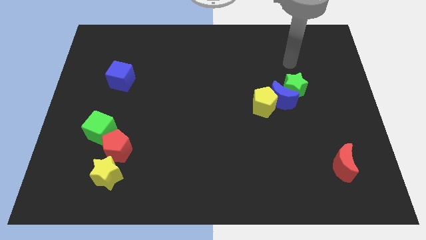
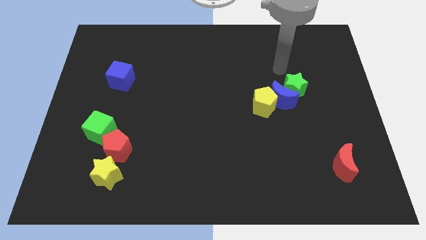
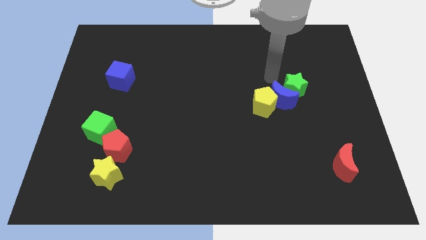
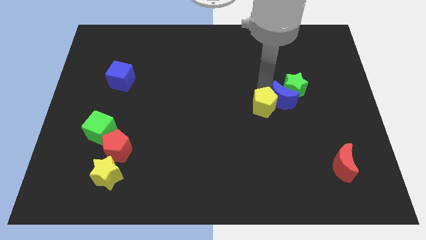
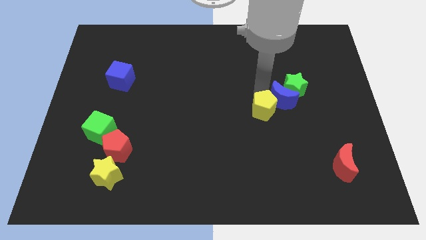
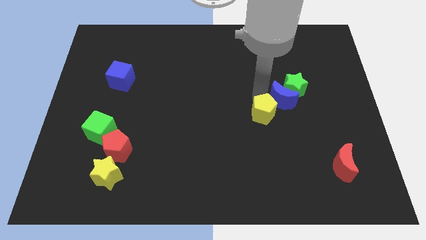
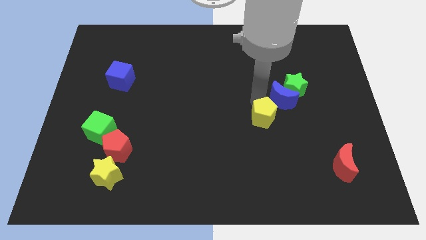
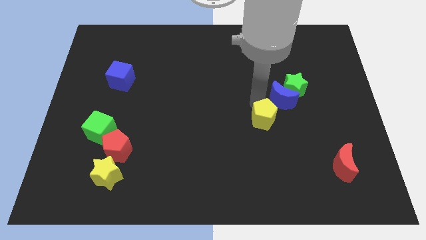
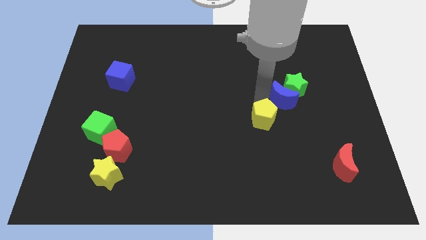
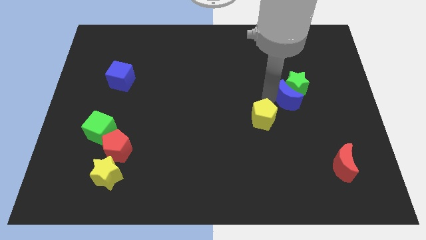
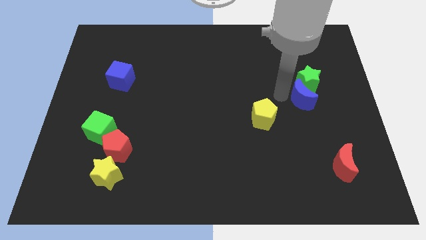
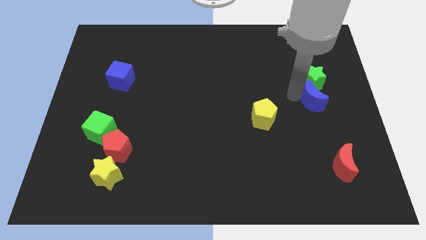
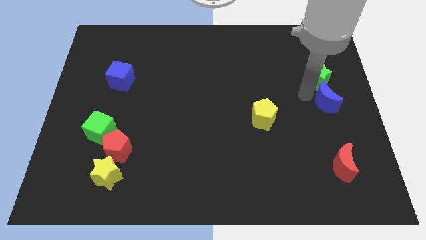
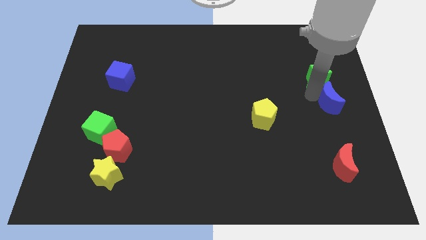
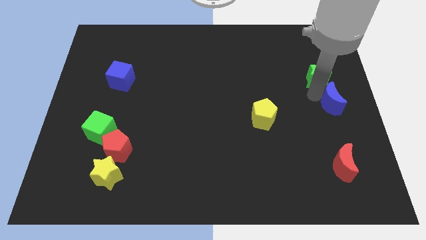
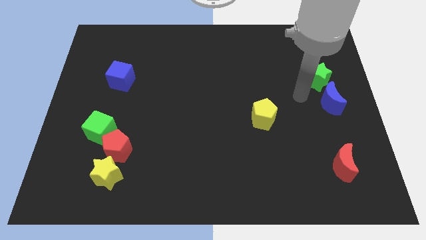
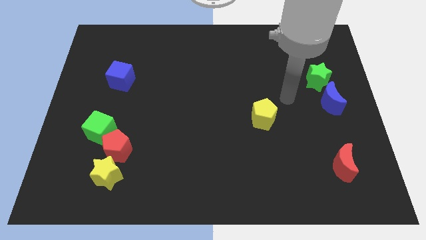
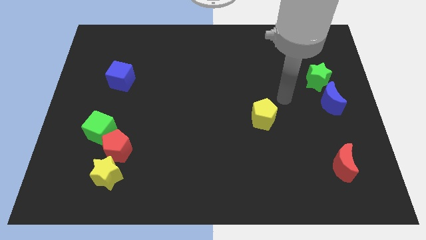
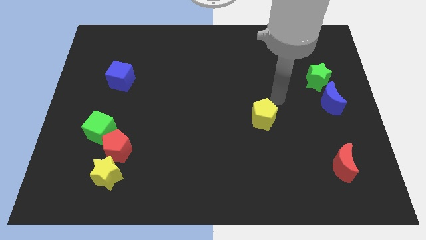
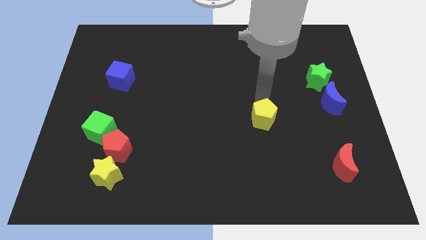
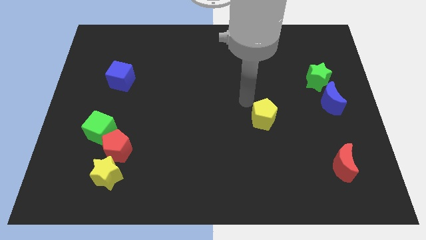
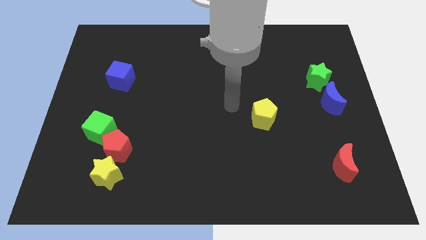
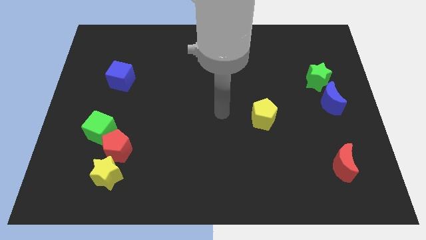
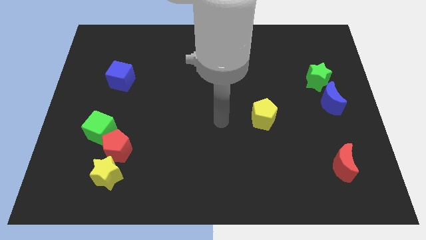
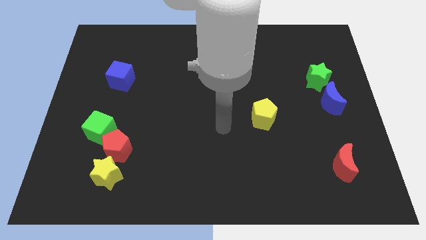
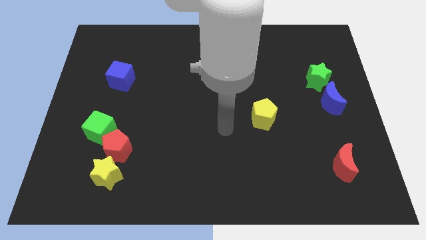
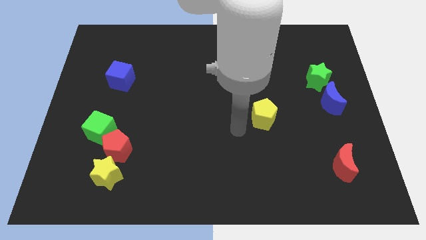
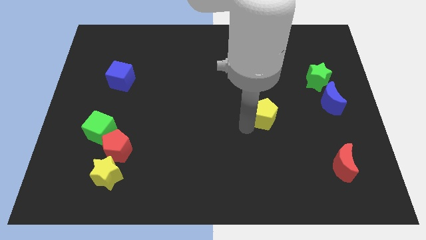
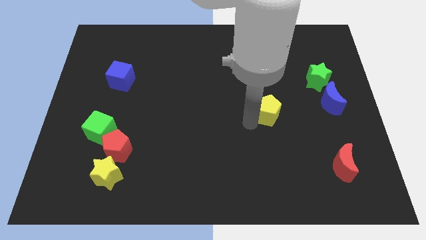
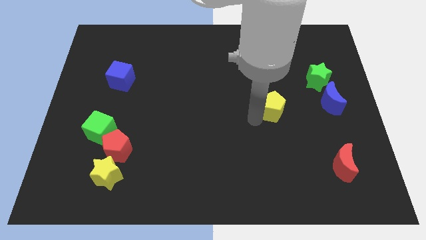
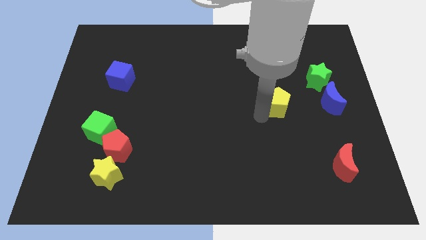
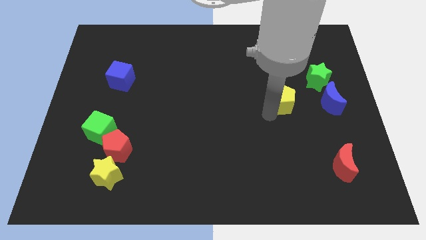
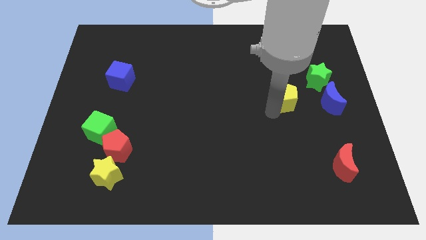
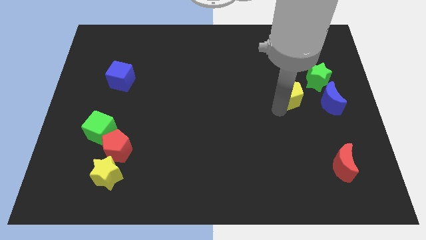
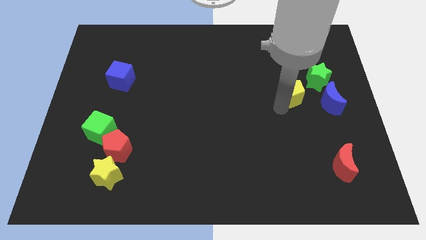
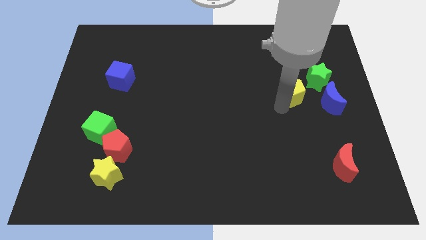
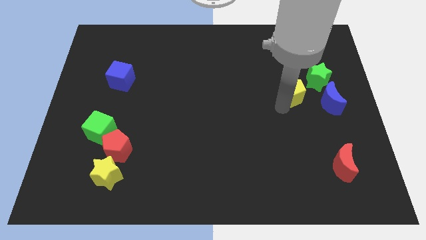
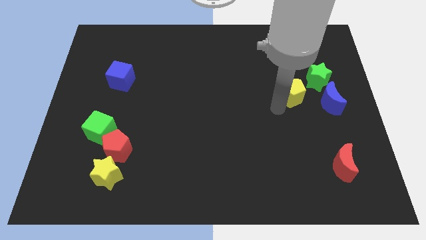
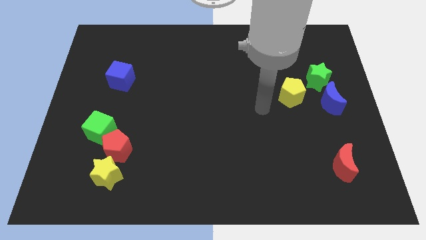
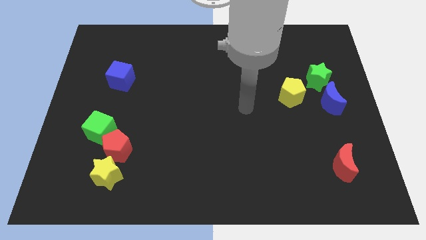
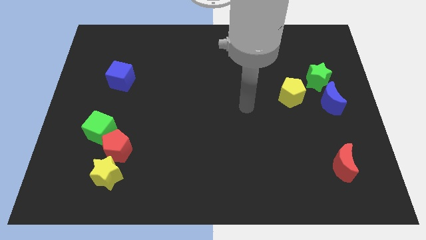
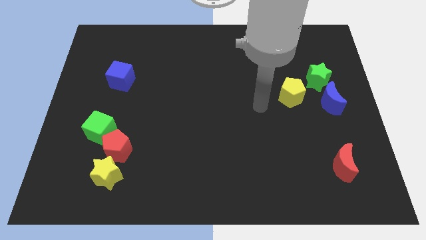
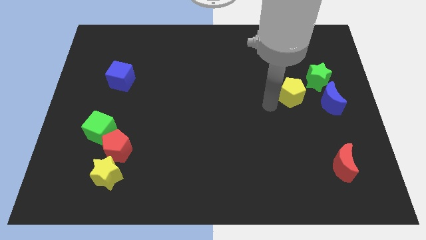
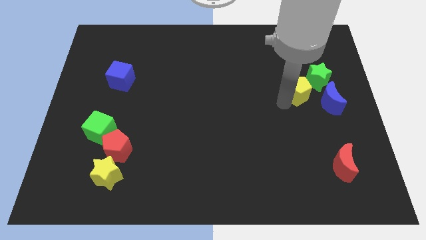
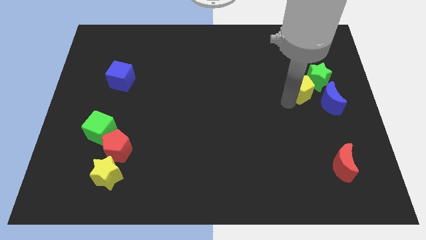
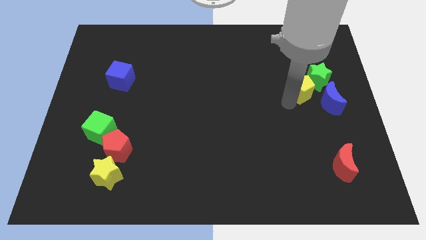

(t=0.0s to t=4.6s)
move the group of blocks to the right side of the table

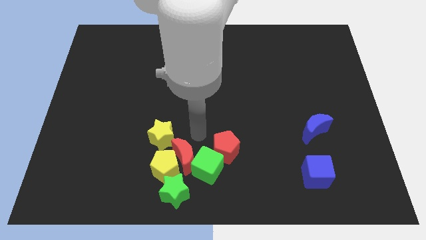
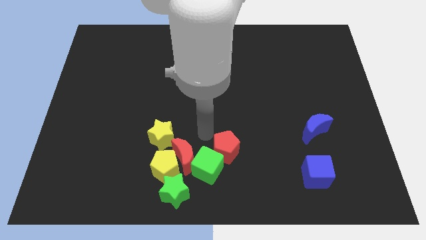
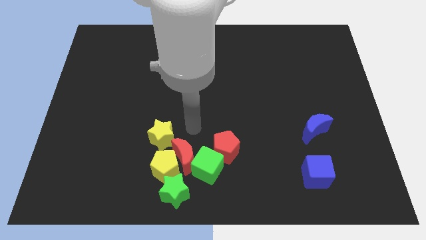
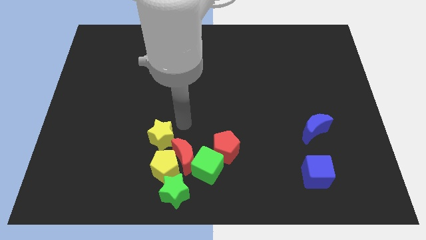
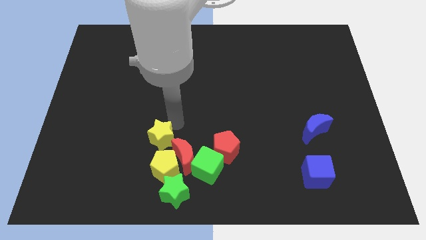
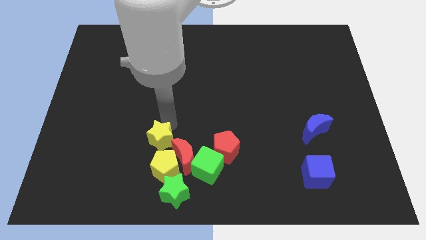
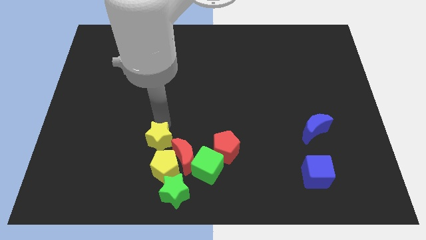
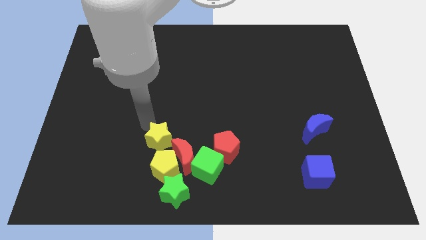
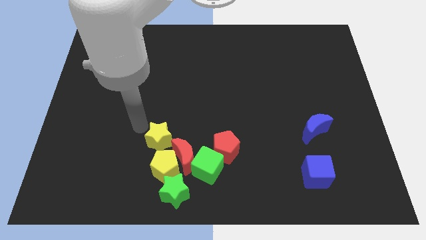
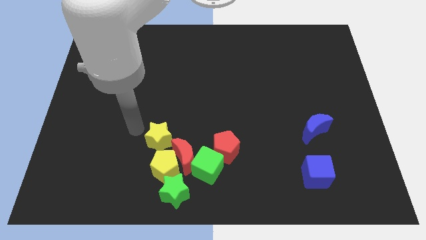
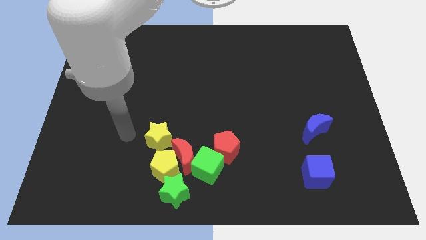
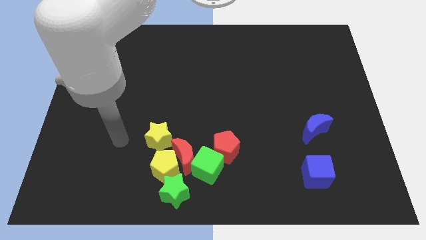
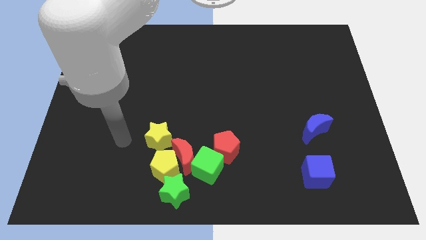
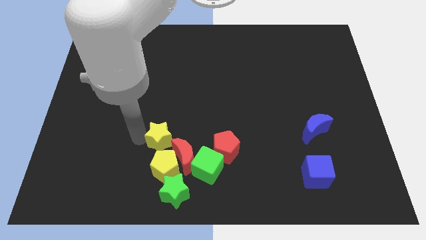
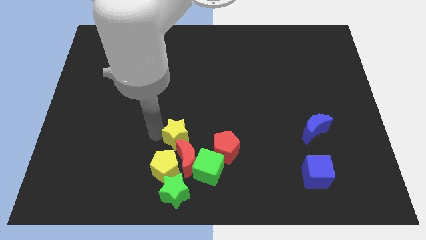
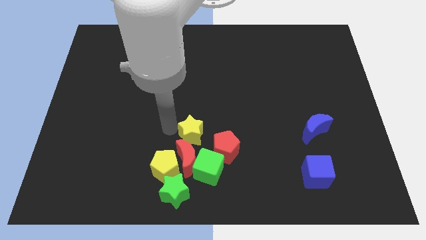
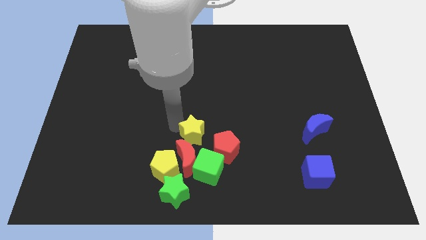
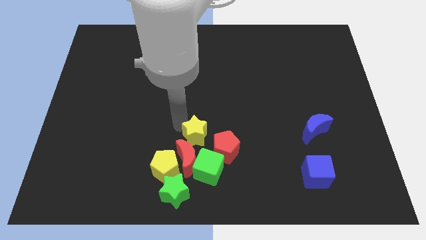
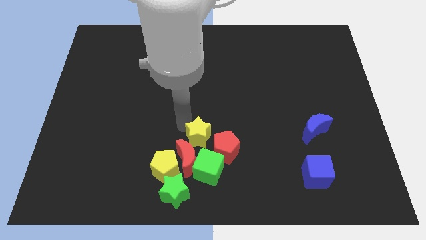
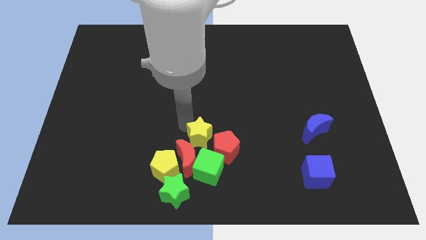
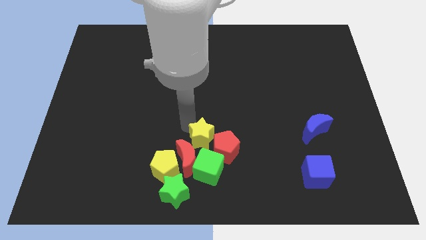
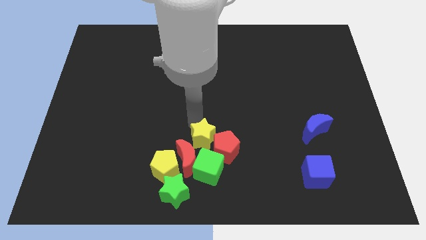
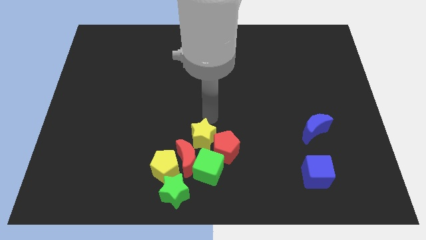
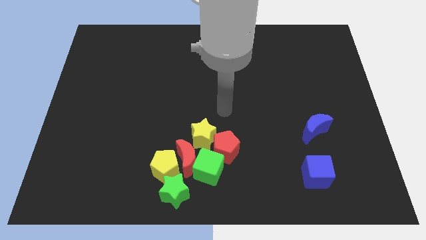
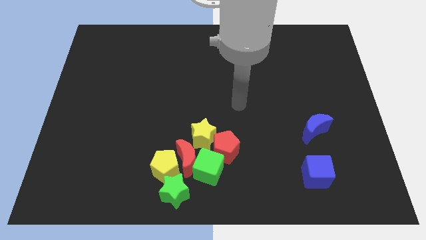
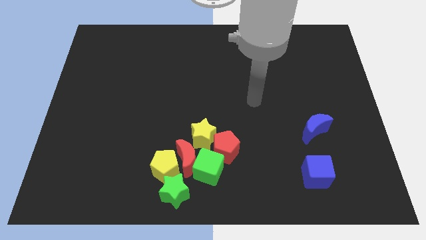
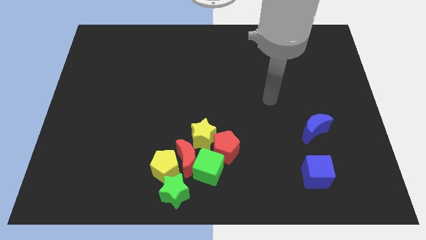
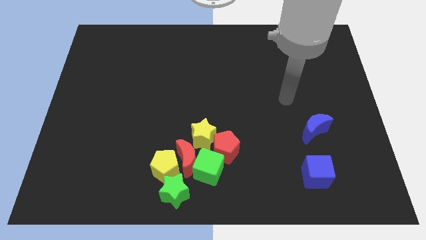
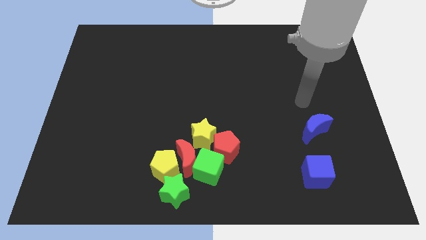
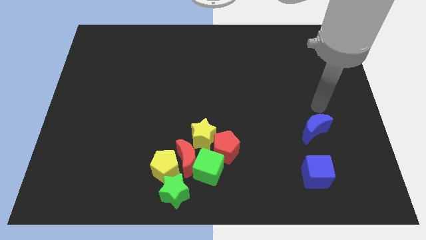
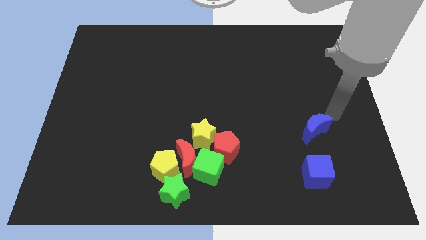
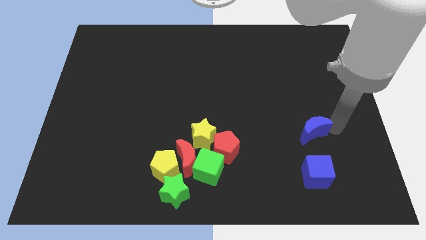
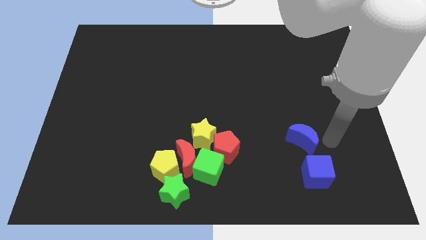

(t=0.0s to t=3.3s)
move the yellow star near red pentagon

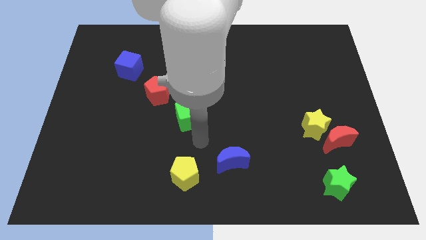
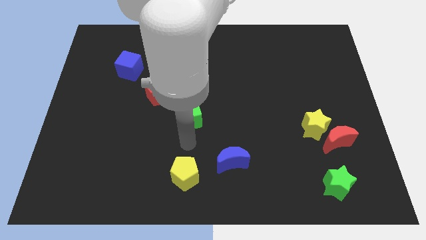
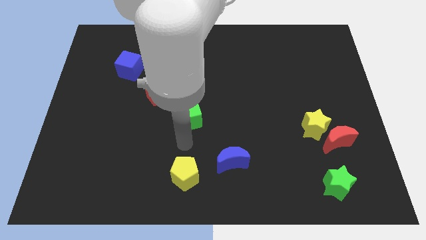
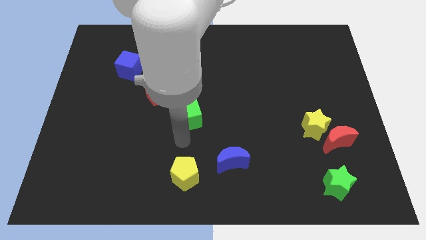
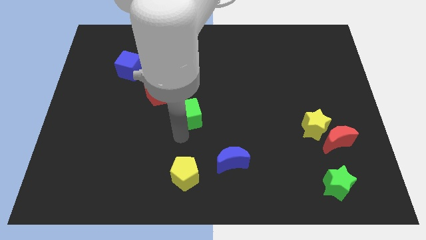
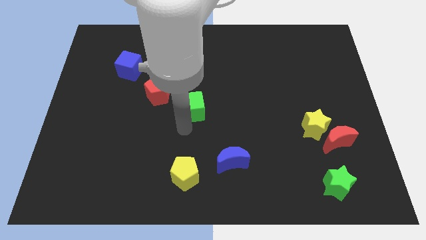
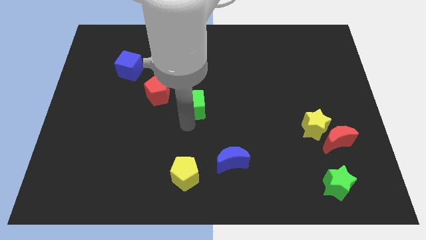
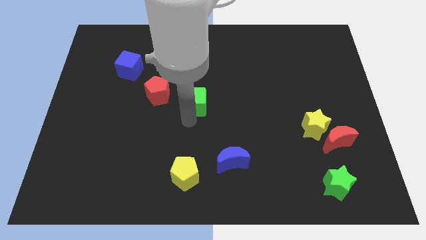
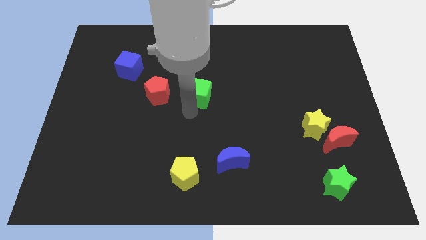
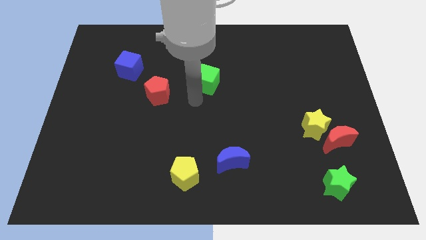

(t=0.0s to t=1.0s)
move the green cube to the right of the red pentagon
